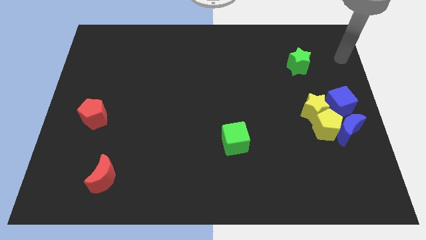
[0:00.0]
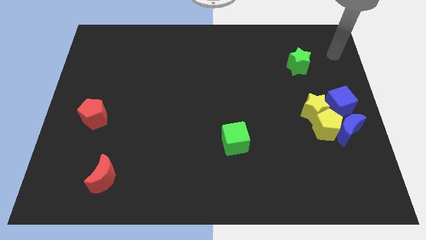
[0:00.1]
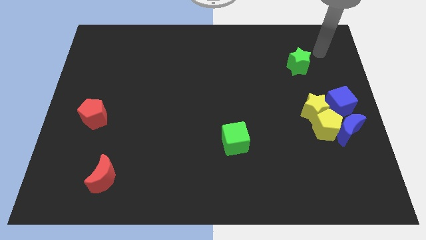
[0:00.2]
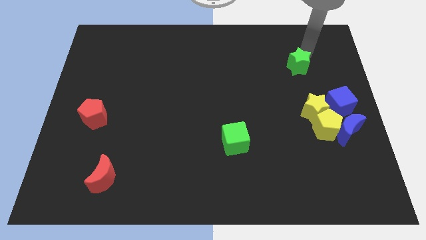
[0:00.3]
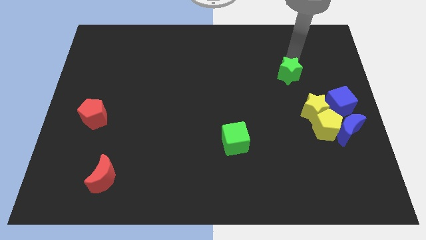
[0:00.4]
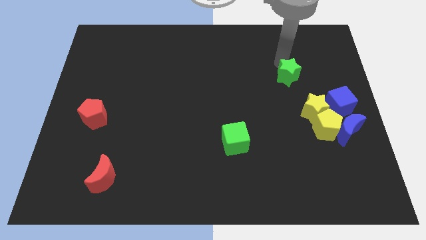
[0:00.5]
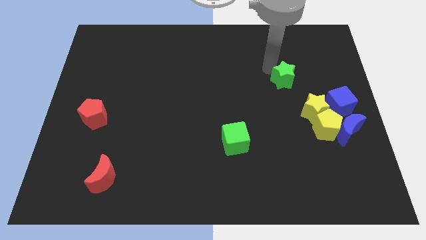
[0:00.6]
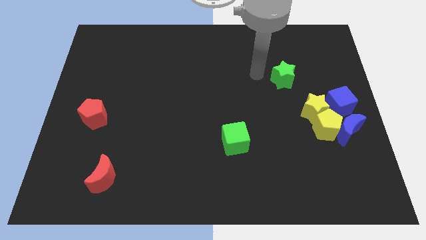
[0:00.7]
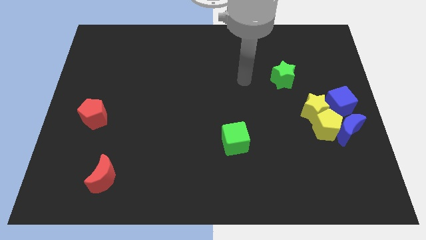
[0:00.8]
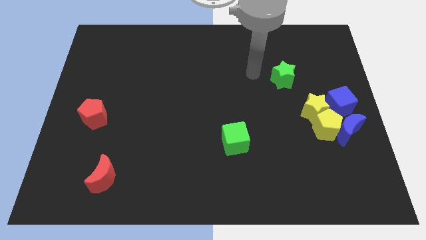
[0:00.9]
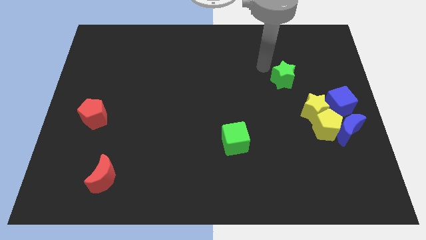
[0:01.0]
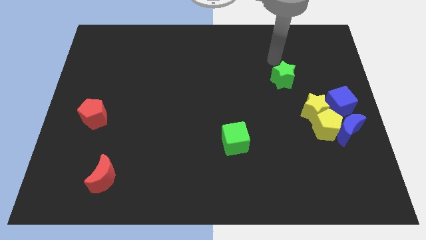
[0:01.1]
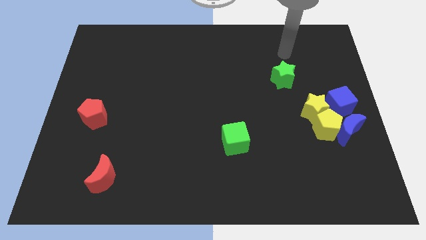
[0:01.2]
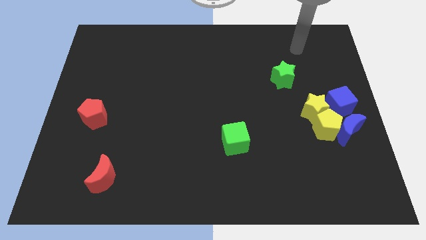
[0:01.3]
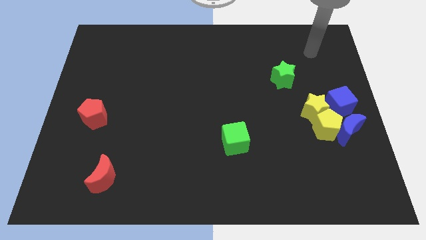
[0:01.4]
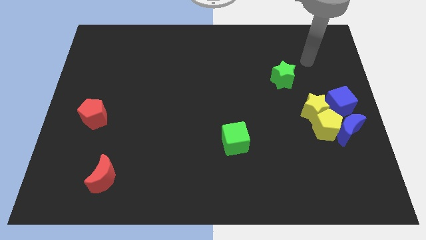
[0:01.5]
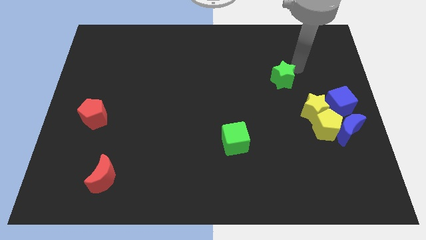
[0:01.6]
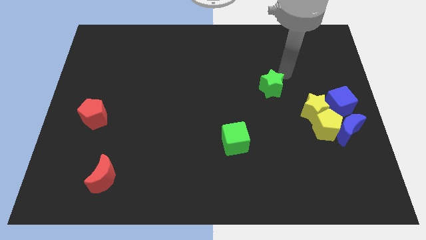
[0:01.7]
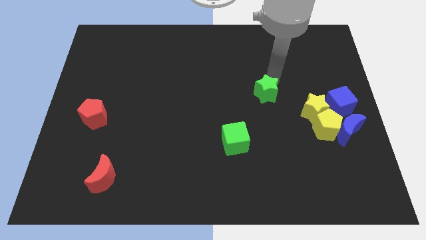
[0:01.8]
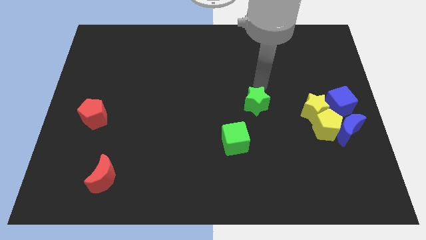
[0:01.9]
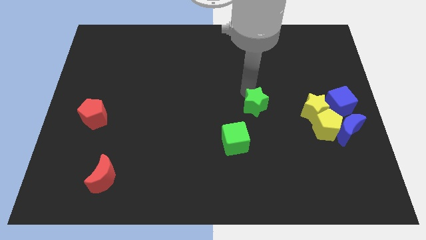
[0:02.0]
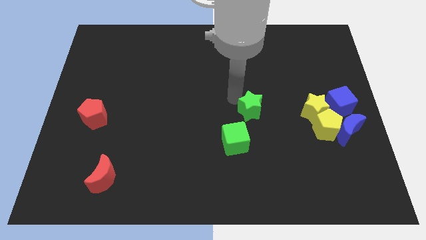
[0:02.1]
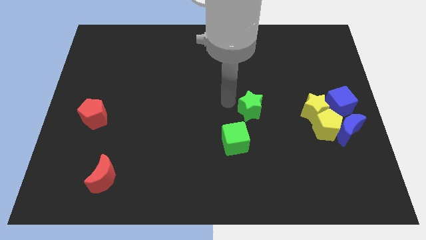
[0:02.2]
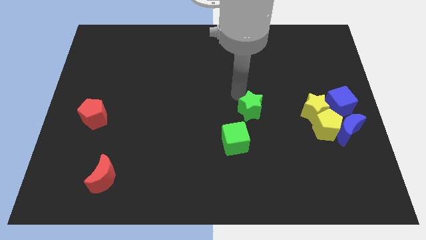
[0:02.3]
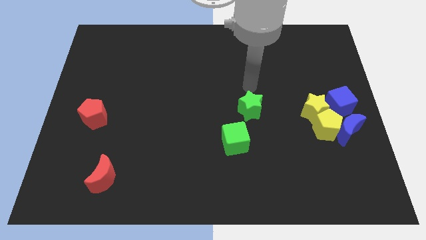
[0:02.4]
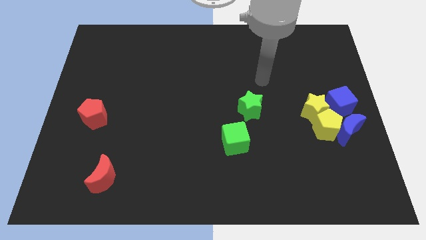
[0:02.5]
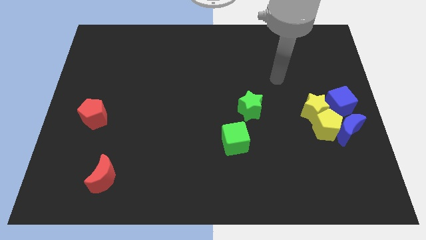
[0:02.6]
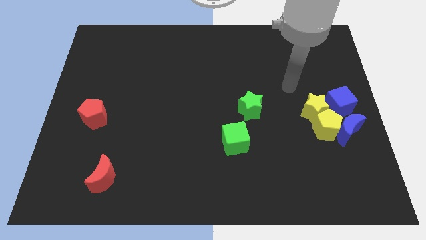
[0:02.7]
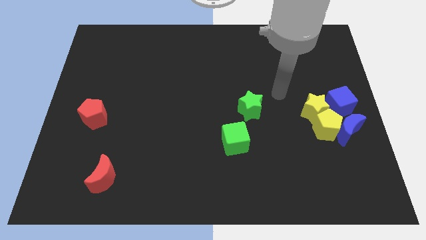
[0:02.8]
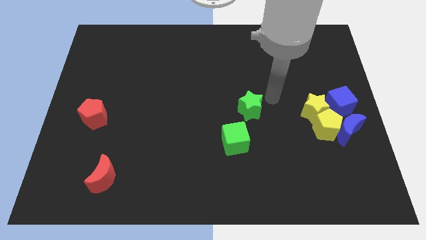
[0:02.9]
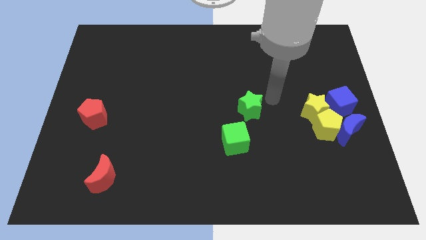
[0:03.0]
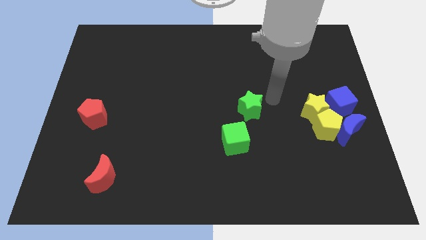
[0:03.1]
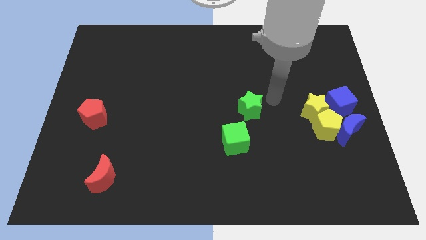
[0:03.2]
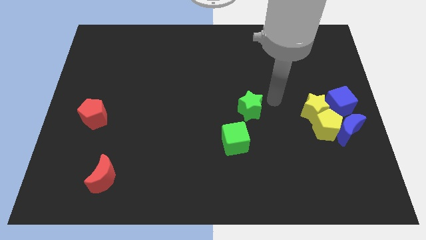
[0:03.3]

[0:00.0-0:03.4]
slide the green star parallel to the yellow star

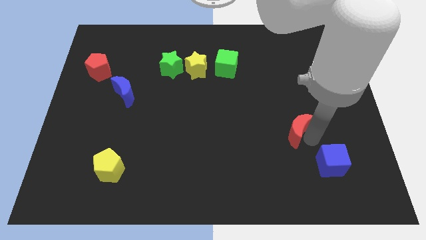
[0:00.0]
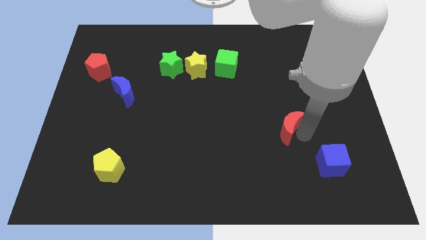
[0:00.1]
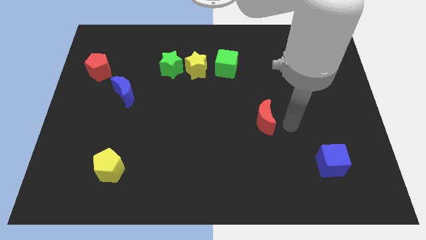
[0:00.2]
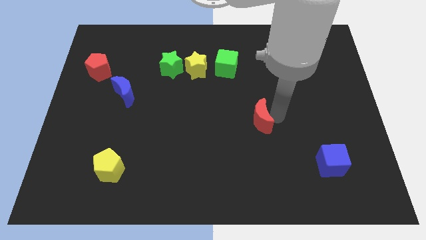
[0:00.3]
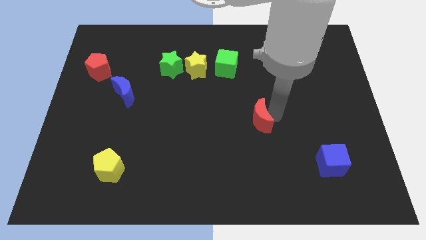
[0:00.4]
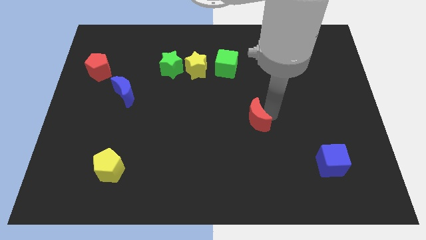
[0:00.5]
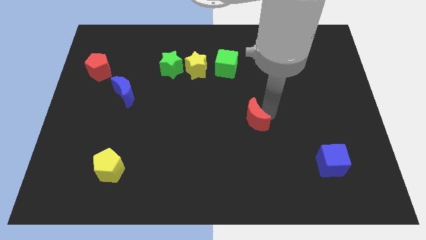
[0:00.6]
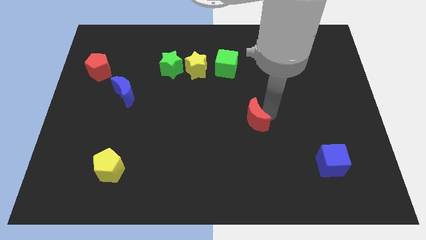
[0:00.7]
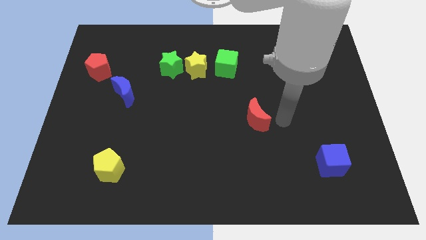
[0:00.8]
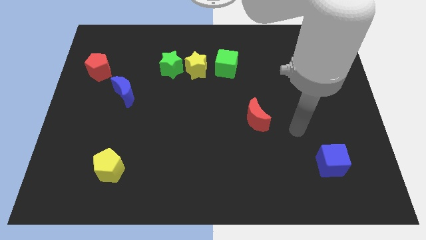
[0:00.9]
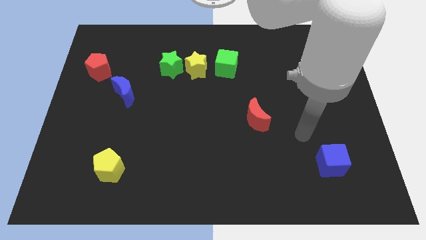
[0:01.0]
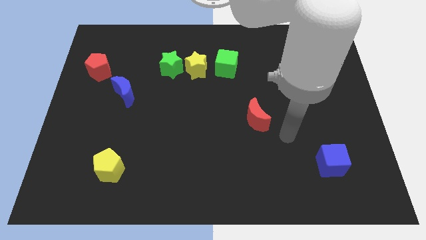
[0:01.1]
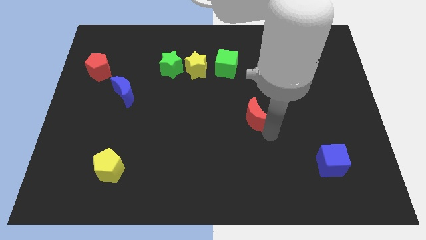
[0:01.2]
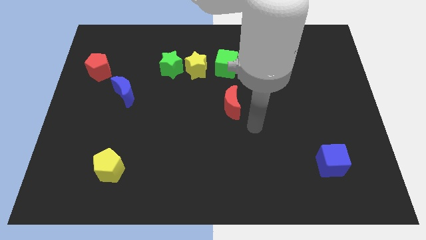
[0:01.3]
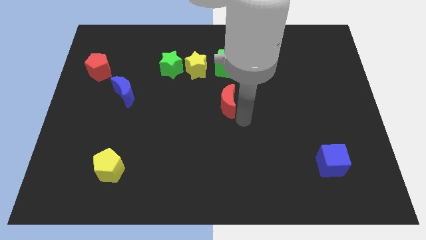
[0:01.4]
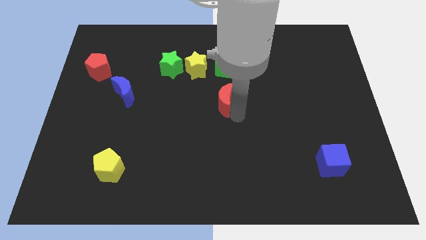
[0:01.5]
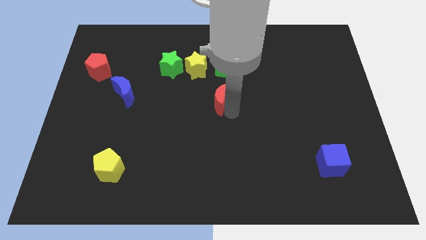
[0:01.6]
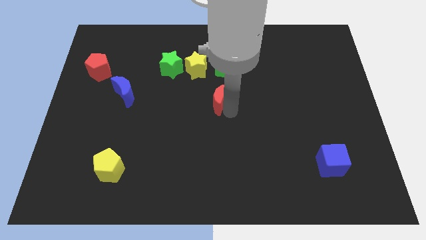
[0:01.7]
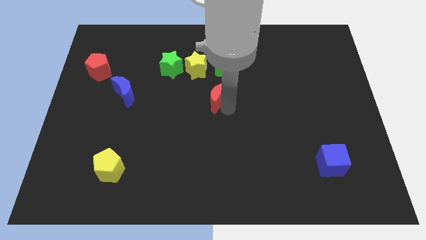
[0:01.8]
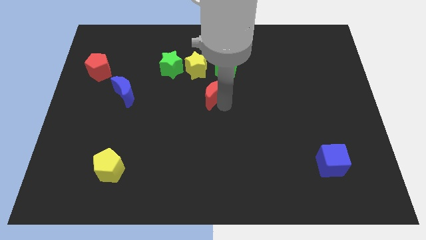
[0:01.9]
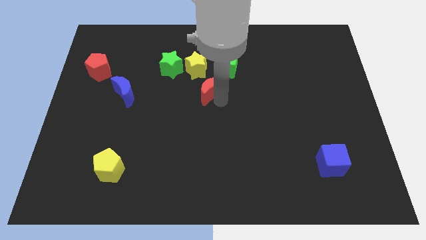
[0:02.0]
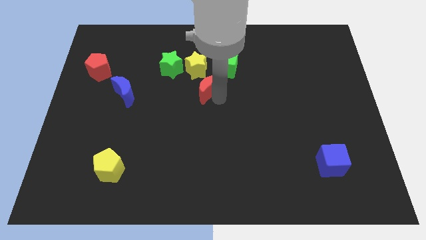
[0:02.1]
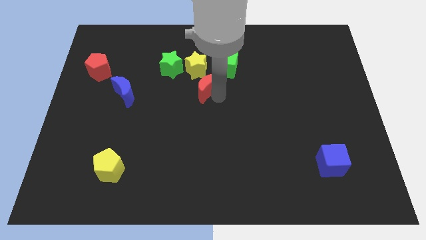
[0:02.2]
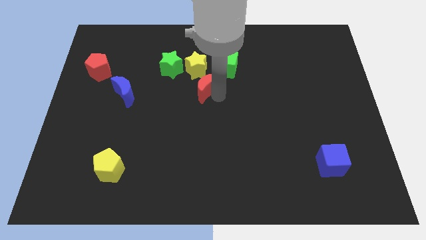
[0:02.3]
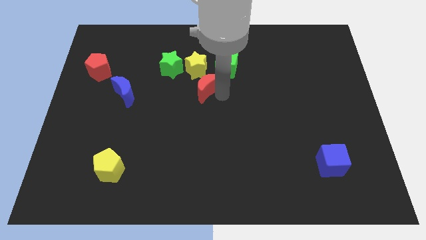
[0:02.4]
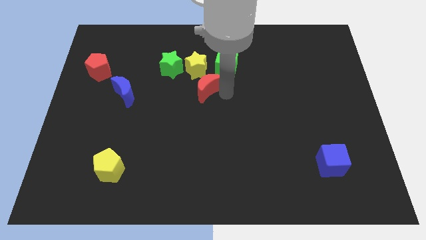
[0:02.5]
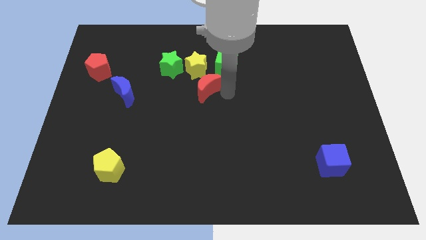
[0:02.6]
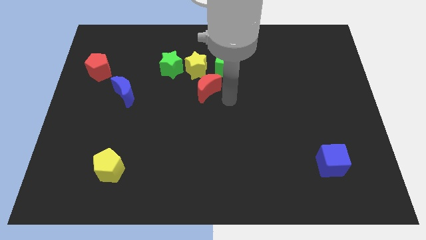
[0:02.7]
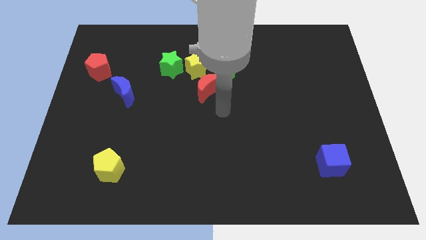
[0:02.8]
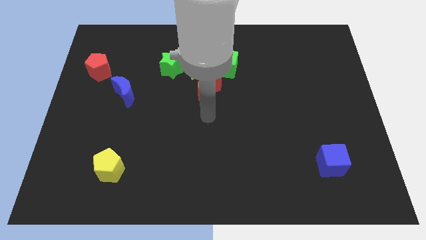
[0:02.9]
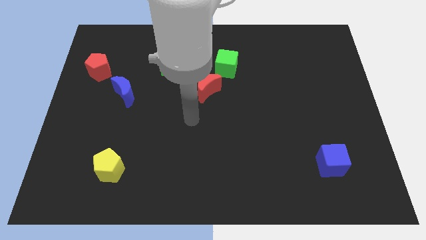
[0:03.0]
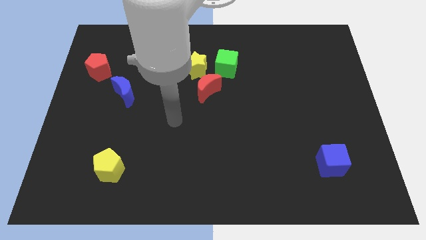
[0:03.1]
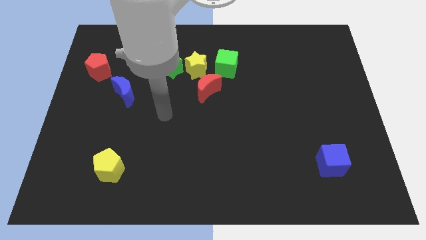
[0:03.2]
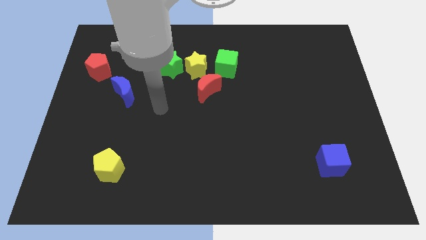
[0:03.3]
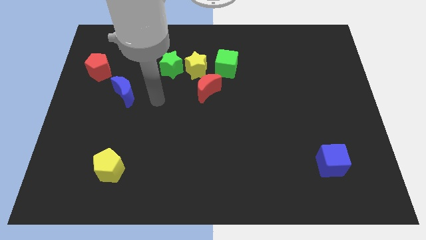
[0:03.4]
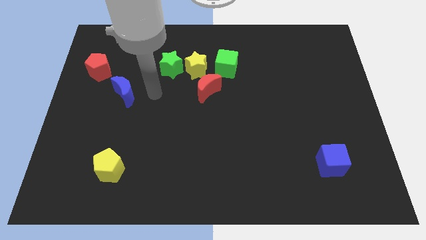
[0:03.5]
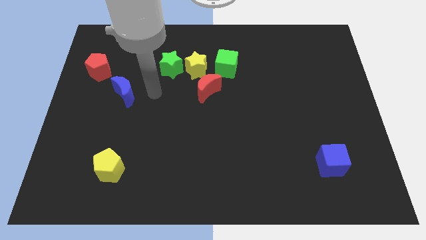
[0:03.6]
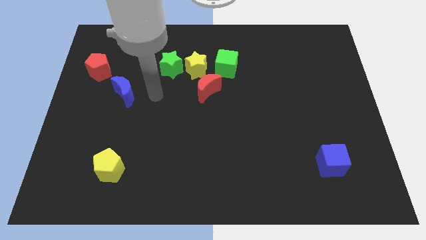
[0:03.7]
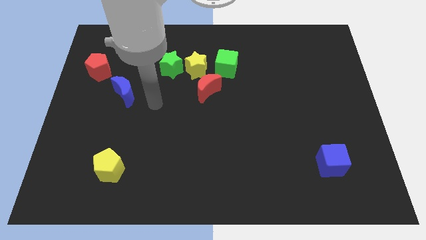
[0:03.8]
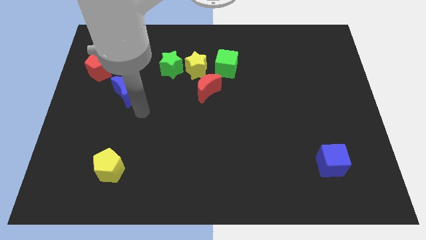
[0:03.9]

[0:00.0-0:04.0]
place the red crescent towards the bottom right side of the yellow star

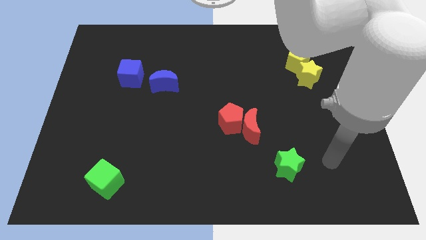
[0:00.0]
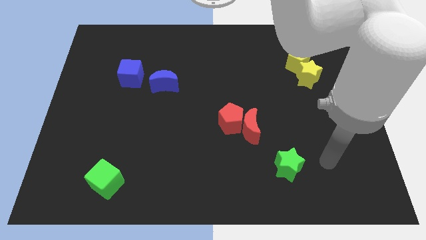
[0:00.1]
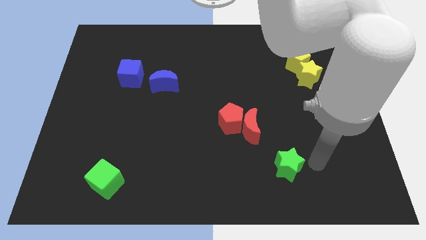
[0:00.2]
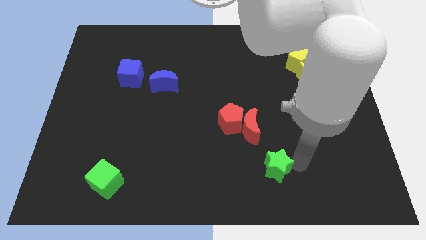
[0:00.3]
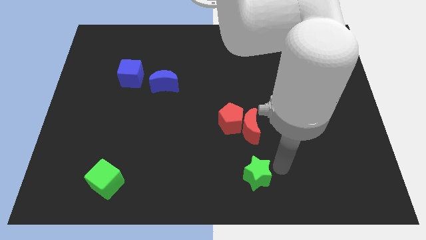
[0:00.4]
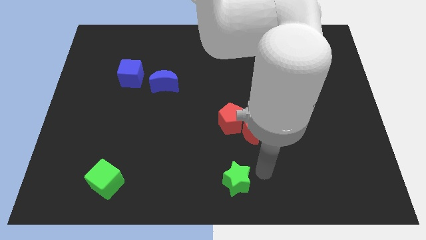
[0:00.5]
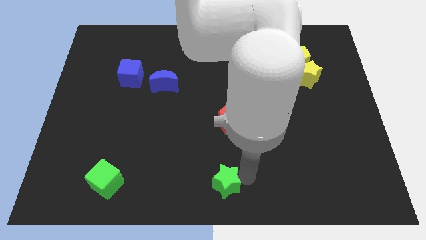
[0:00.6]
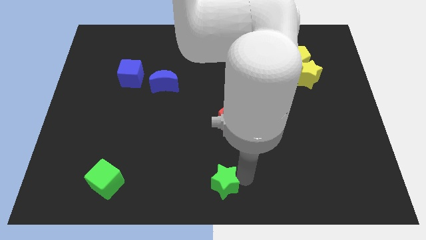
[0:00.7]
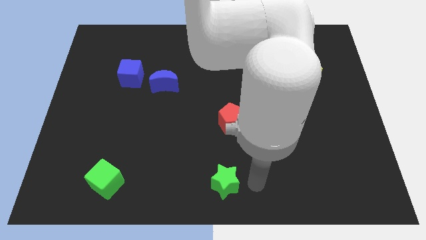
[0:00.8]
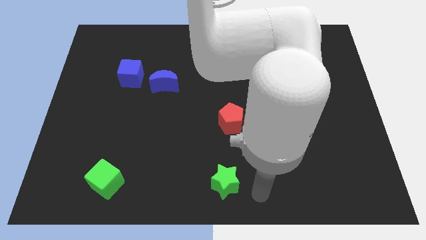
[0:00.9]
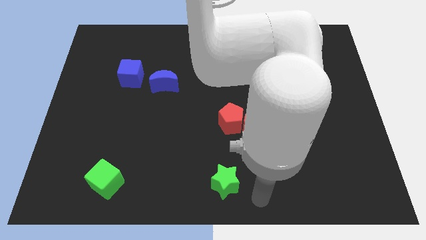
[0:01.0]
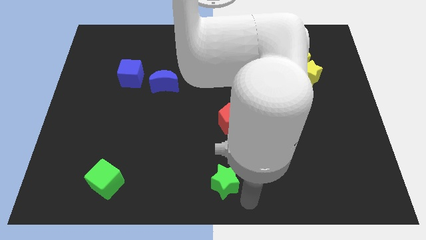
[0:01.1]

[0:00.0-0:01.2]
push the green star to the bottom of the red pentagon

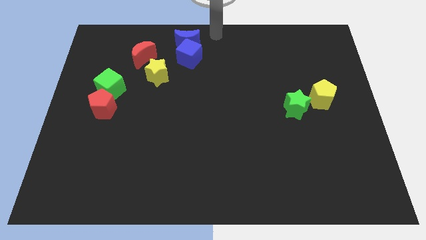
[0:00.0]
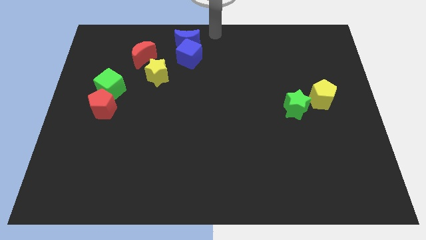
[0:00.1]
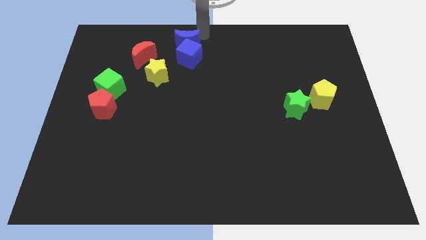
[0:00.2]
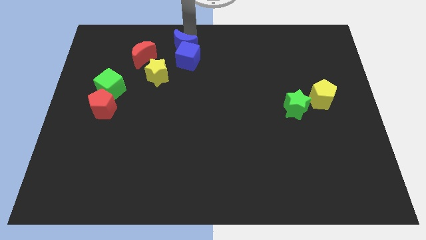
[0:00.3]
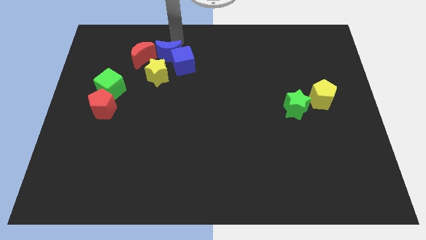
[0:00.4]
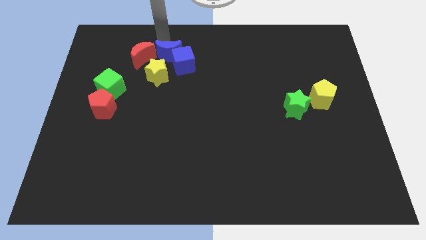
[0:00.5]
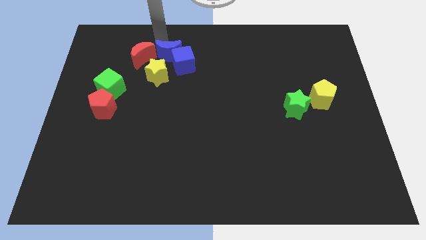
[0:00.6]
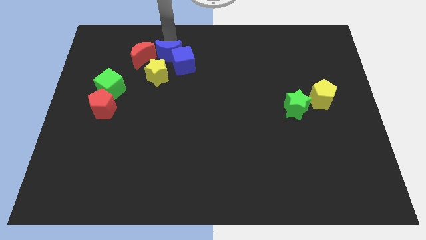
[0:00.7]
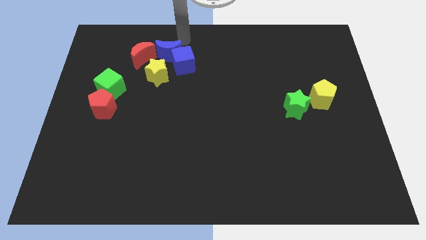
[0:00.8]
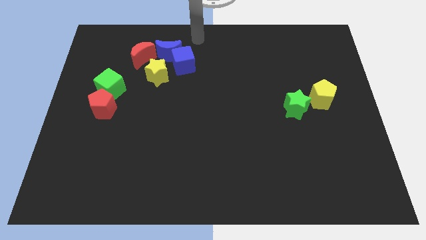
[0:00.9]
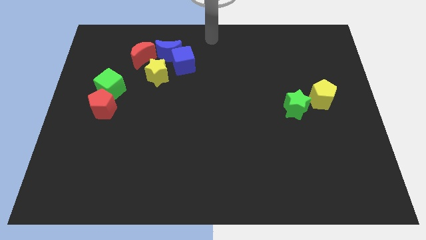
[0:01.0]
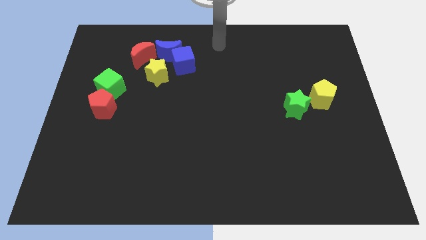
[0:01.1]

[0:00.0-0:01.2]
push the blue crescent into the red crescent
